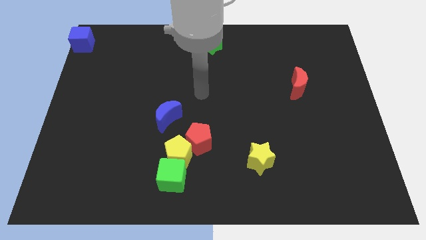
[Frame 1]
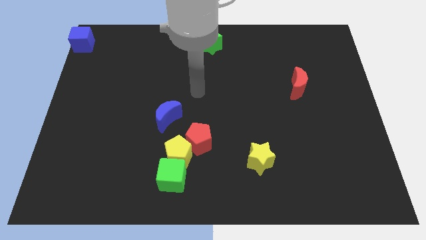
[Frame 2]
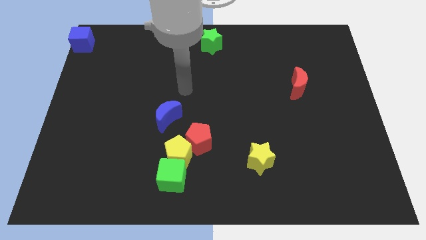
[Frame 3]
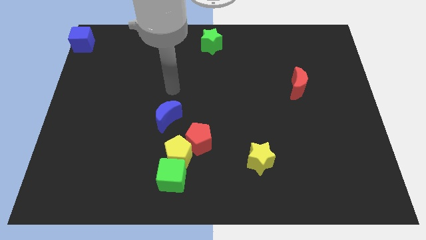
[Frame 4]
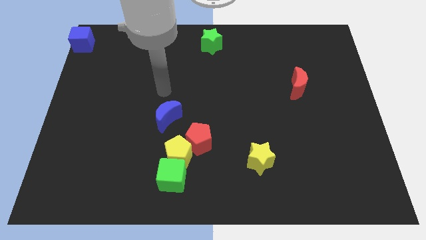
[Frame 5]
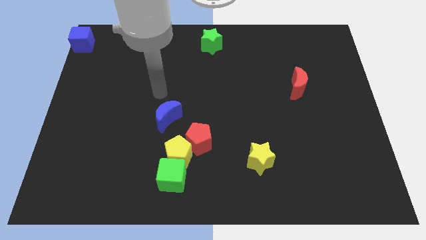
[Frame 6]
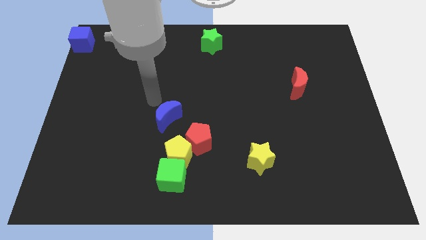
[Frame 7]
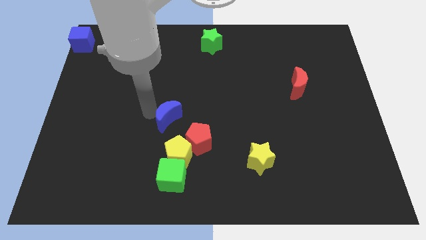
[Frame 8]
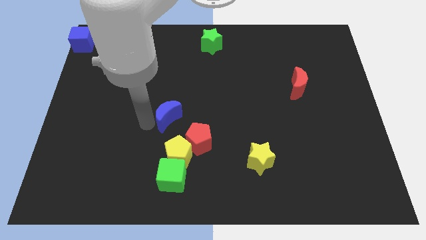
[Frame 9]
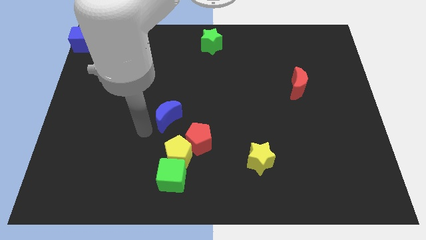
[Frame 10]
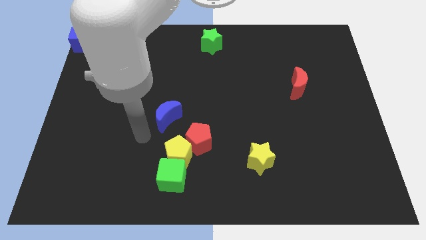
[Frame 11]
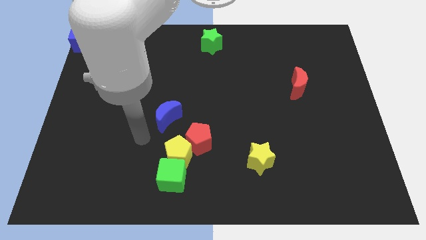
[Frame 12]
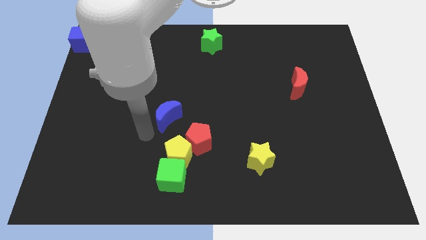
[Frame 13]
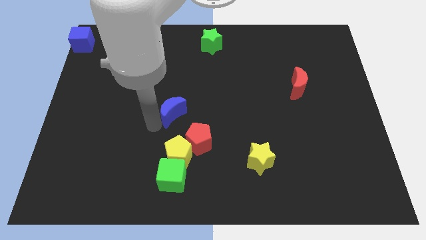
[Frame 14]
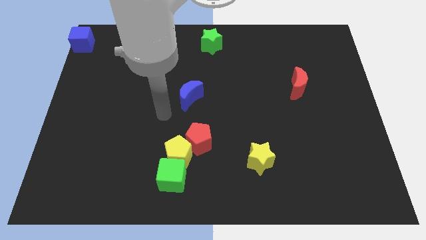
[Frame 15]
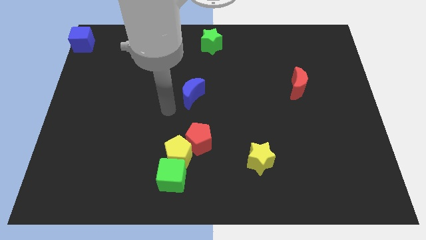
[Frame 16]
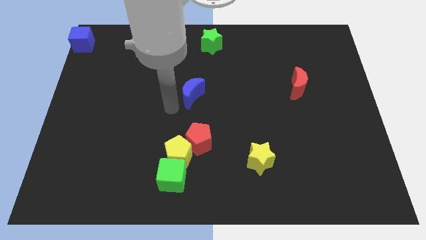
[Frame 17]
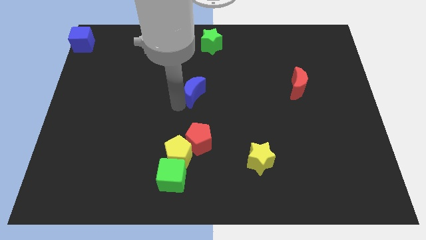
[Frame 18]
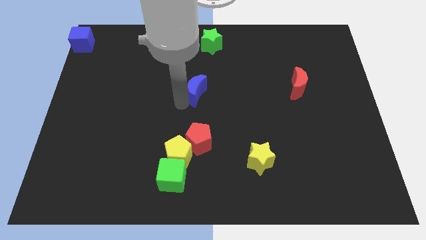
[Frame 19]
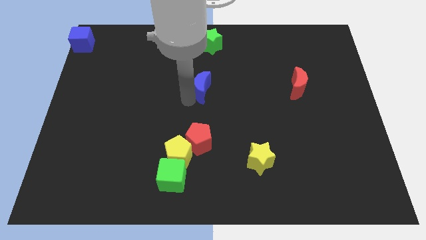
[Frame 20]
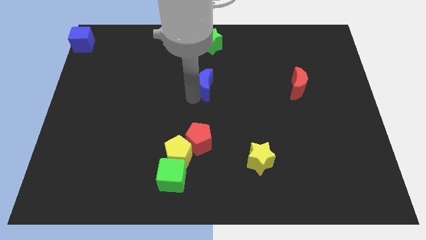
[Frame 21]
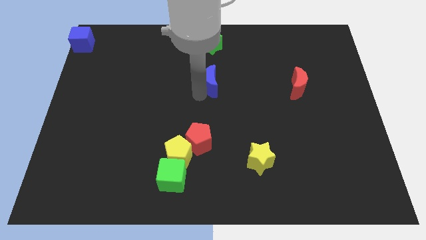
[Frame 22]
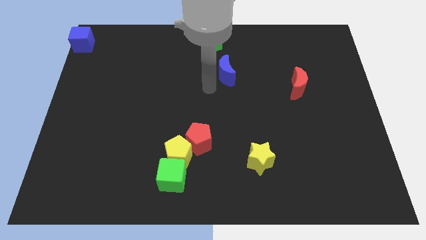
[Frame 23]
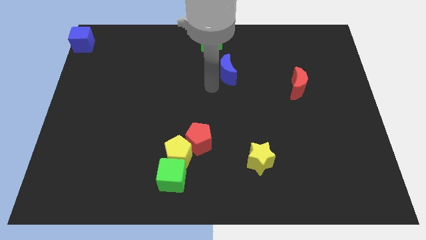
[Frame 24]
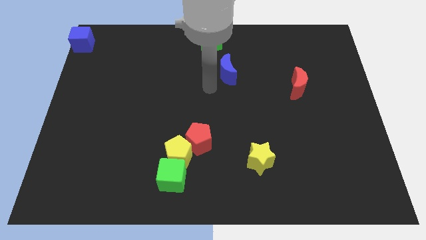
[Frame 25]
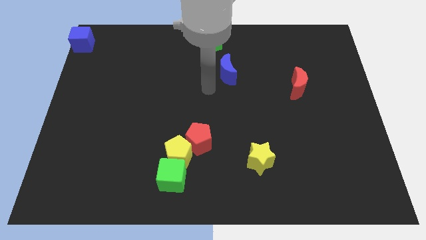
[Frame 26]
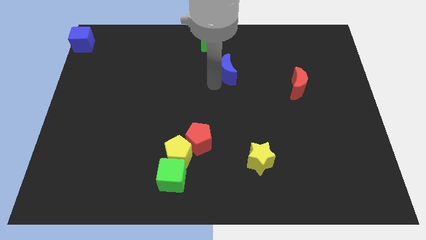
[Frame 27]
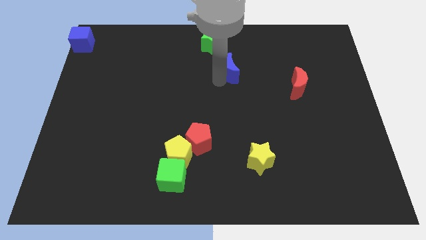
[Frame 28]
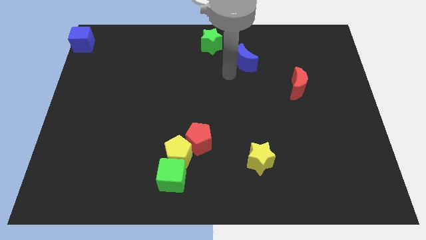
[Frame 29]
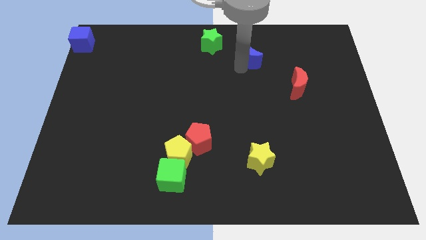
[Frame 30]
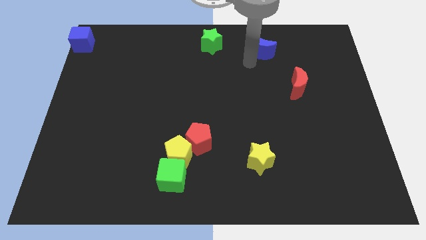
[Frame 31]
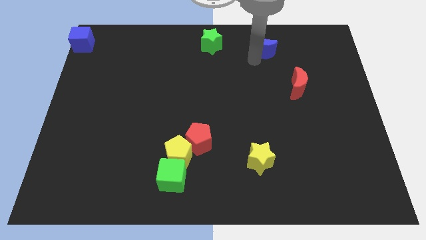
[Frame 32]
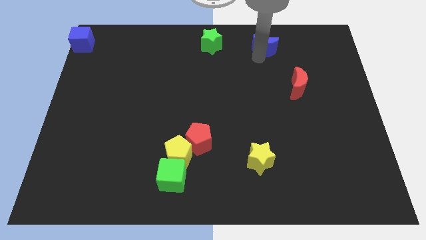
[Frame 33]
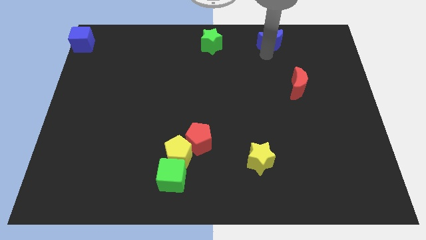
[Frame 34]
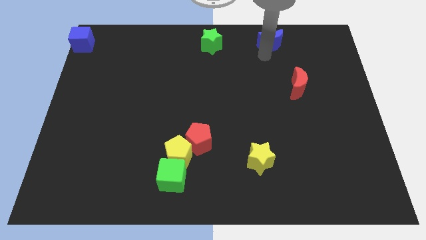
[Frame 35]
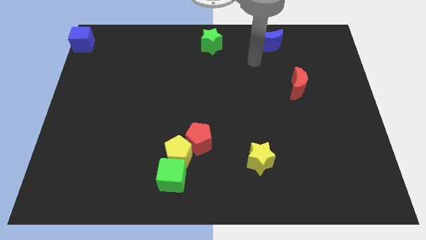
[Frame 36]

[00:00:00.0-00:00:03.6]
slide the blue semicircle to the right side of the green star

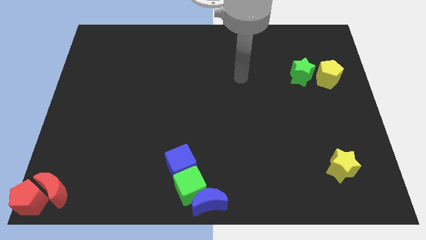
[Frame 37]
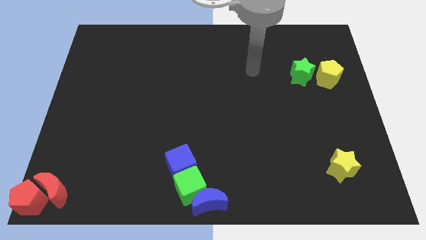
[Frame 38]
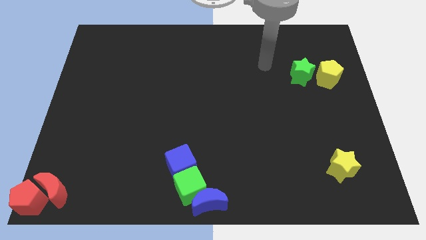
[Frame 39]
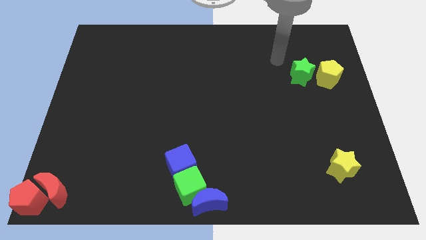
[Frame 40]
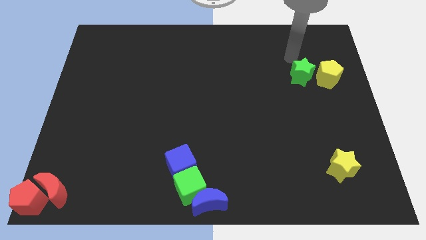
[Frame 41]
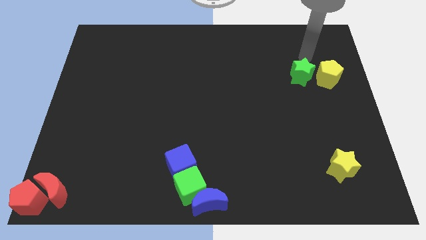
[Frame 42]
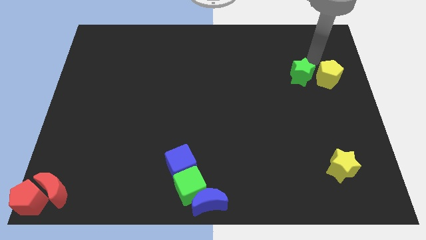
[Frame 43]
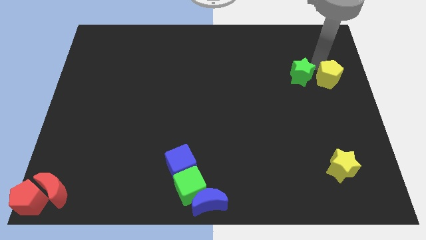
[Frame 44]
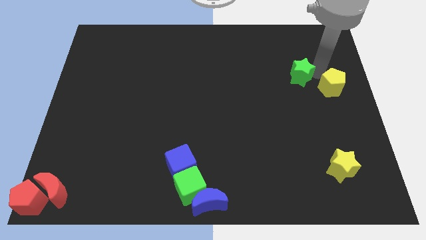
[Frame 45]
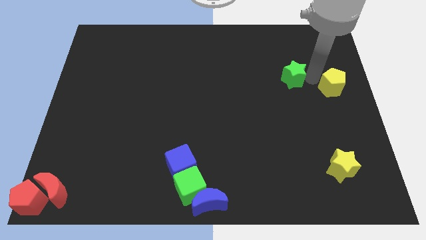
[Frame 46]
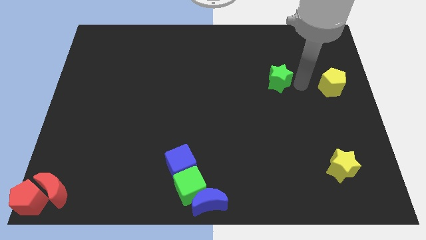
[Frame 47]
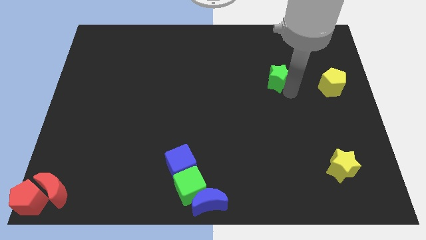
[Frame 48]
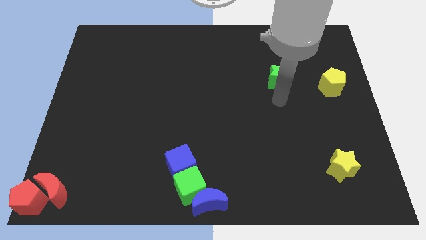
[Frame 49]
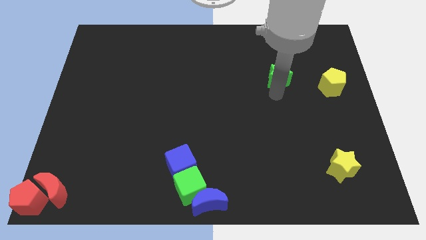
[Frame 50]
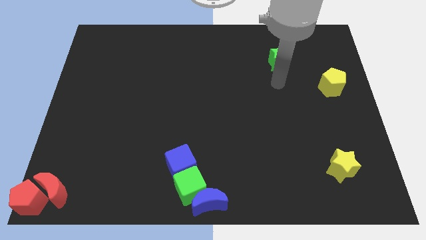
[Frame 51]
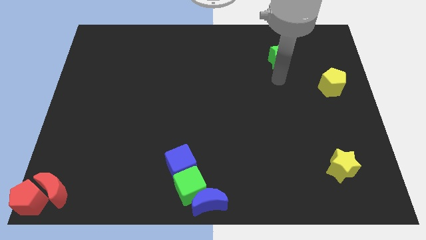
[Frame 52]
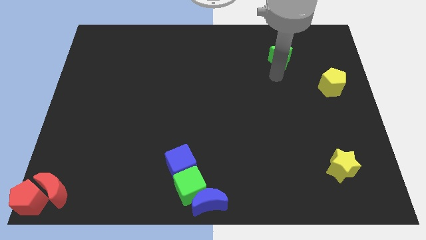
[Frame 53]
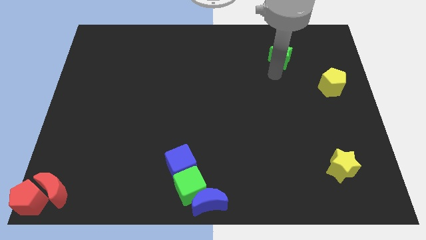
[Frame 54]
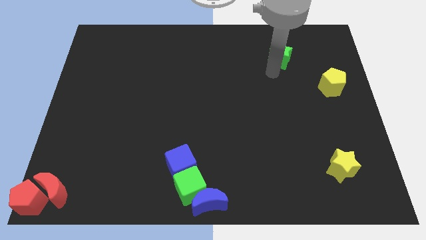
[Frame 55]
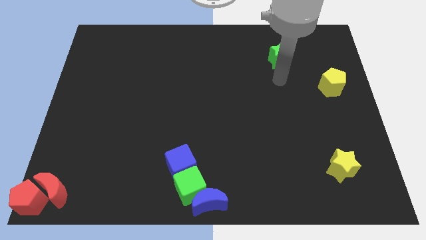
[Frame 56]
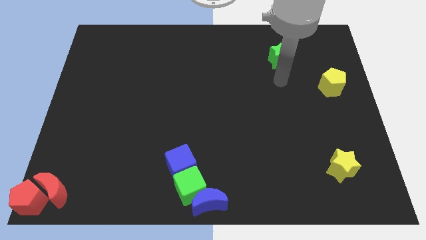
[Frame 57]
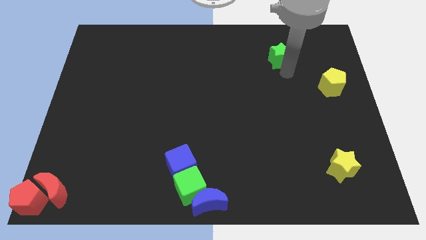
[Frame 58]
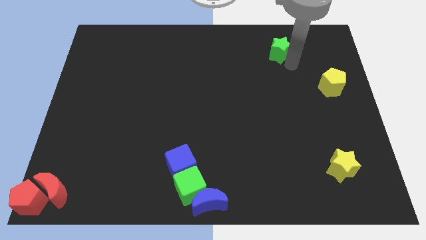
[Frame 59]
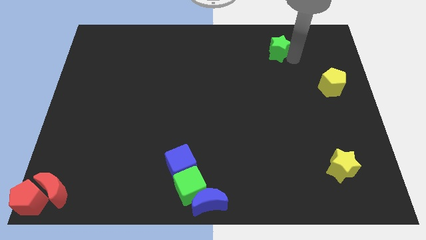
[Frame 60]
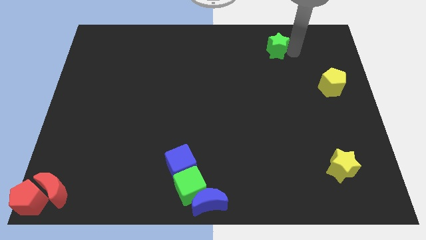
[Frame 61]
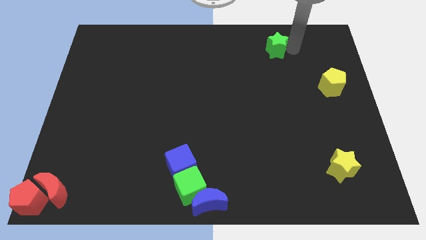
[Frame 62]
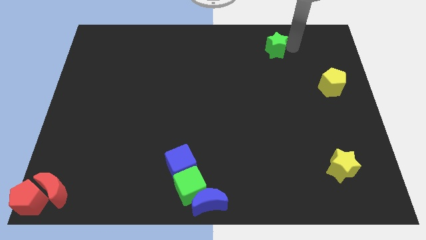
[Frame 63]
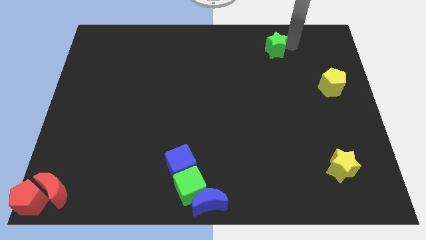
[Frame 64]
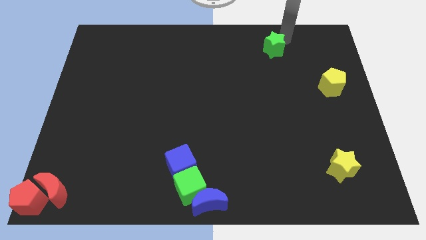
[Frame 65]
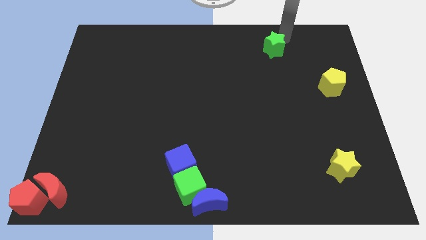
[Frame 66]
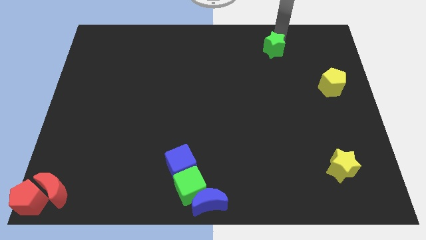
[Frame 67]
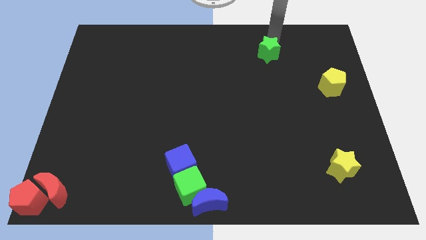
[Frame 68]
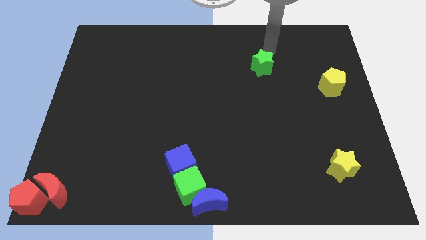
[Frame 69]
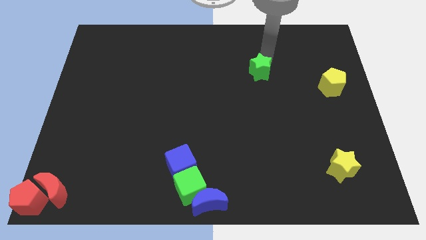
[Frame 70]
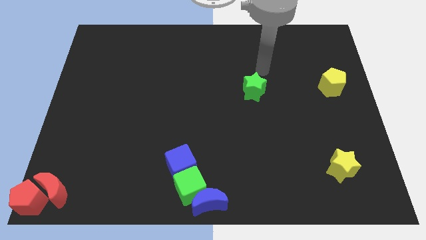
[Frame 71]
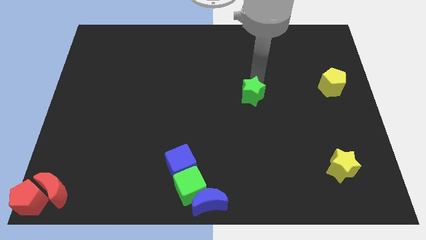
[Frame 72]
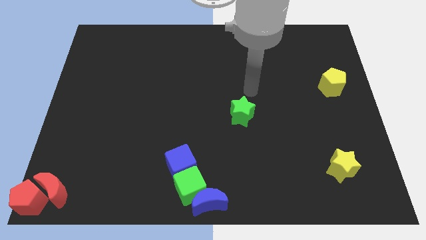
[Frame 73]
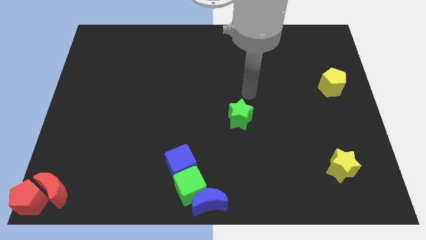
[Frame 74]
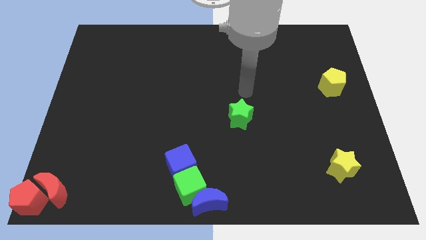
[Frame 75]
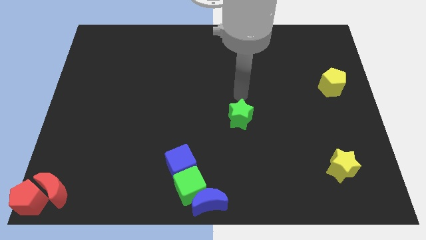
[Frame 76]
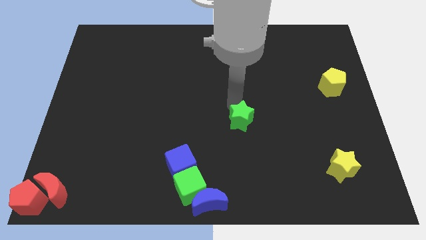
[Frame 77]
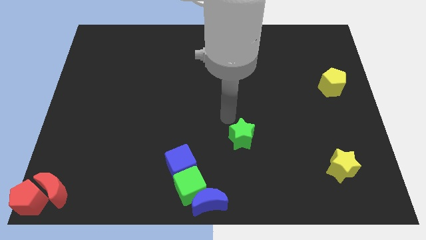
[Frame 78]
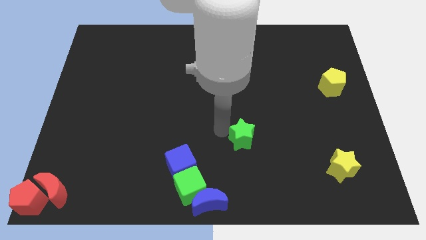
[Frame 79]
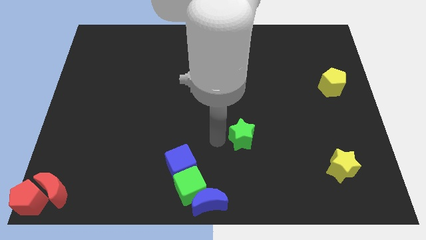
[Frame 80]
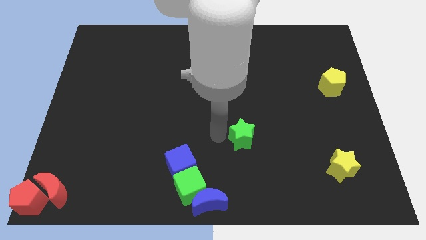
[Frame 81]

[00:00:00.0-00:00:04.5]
separate yellow pentagon and green star

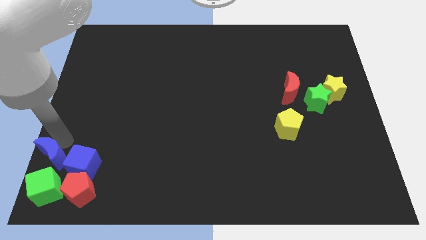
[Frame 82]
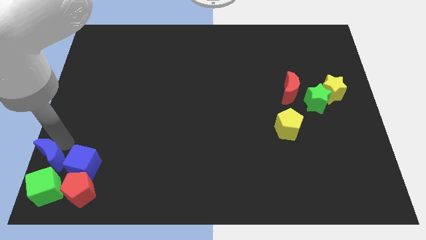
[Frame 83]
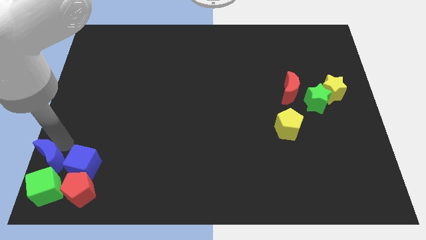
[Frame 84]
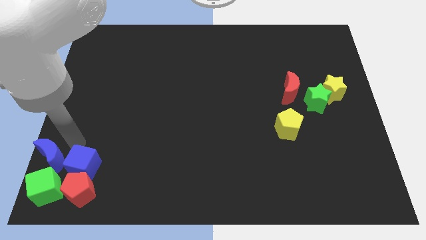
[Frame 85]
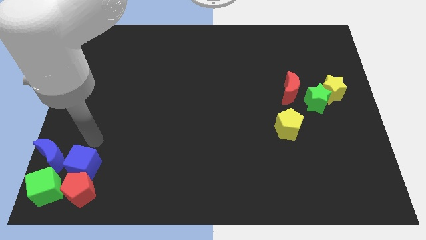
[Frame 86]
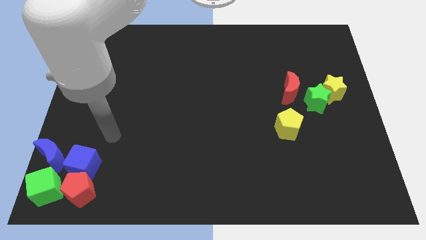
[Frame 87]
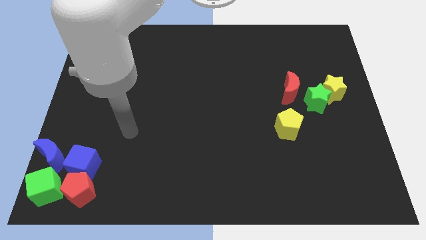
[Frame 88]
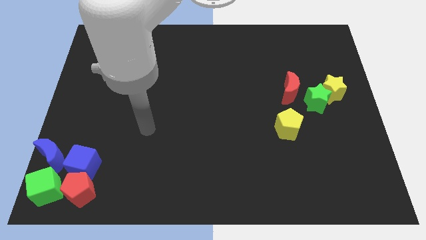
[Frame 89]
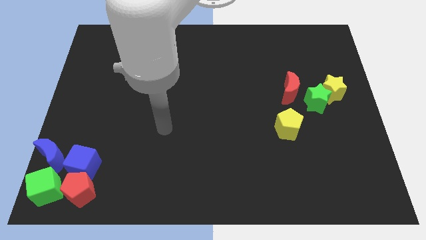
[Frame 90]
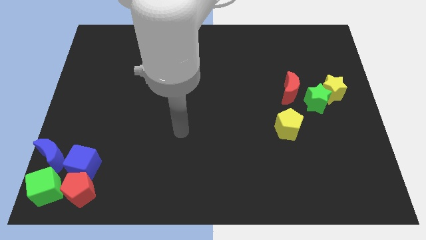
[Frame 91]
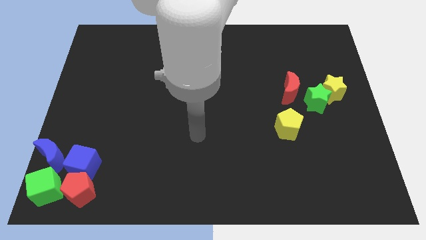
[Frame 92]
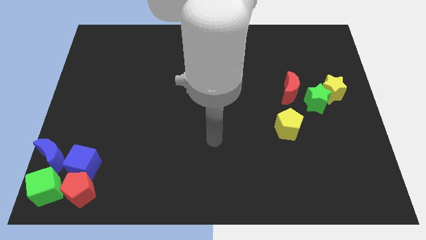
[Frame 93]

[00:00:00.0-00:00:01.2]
place the blue moon above the green cube
